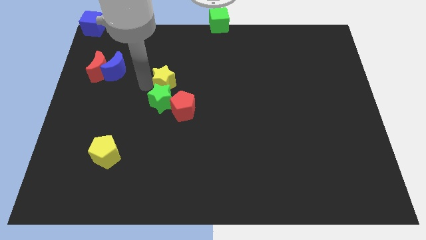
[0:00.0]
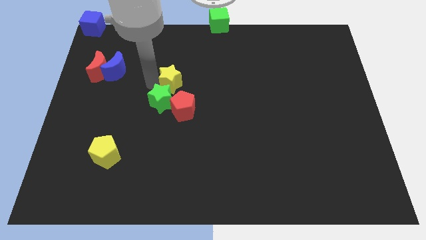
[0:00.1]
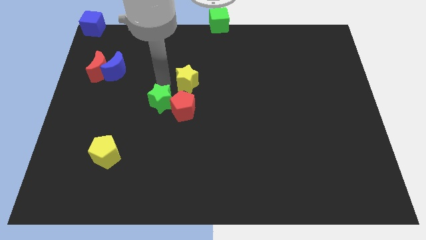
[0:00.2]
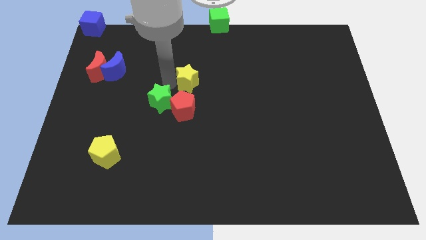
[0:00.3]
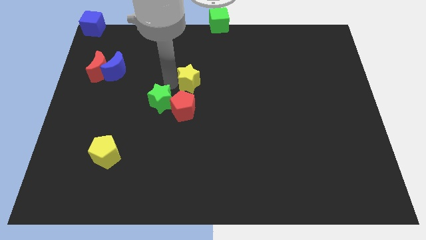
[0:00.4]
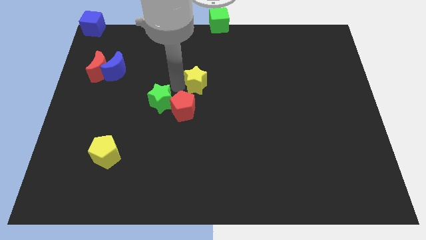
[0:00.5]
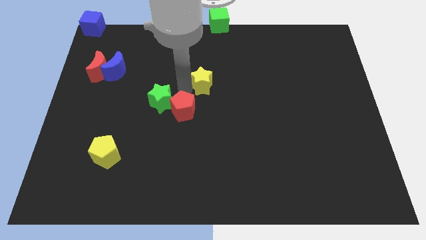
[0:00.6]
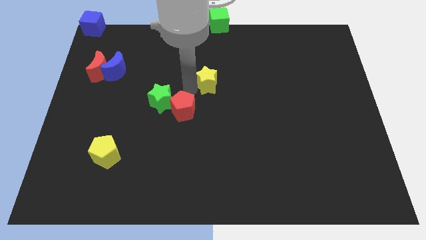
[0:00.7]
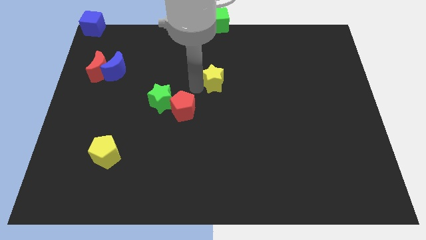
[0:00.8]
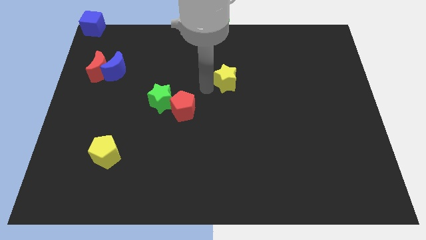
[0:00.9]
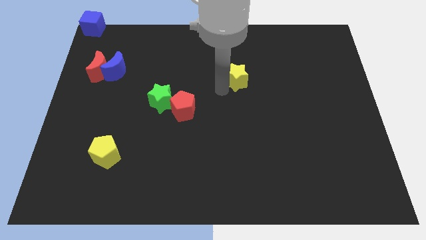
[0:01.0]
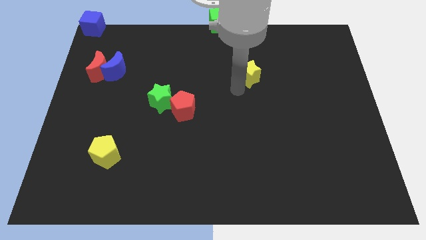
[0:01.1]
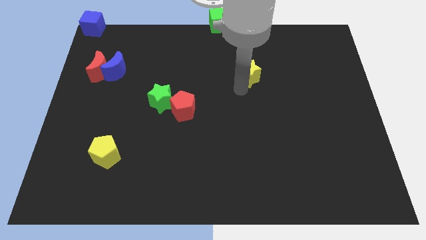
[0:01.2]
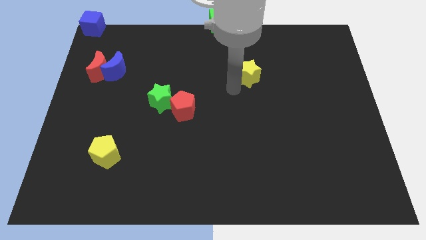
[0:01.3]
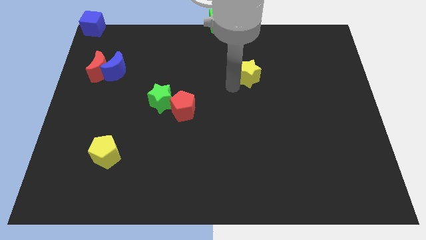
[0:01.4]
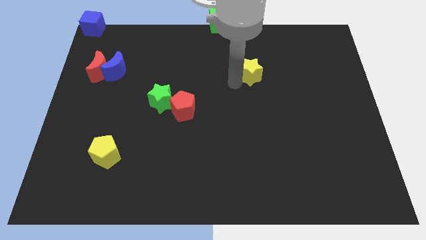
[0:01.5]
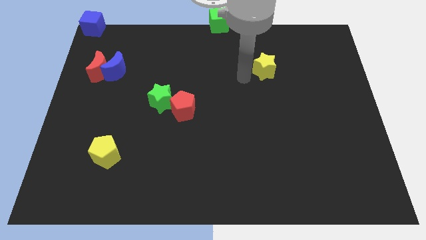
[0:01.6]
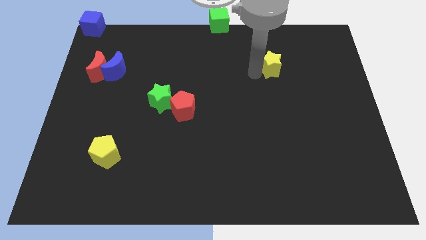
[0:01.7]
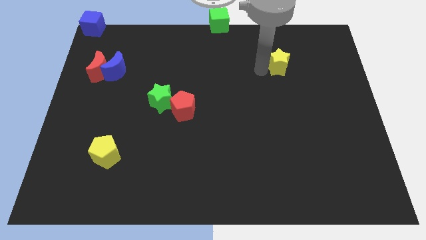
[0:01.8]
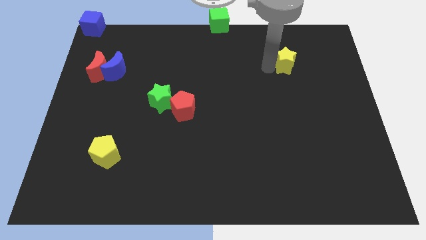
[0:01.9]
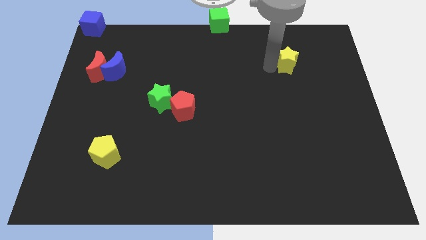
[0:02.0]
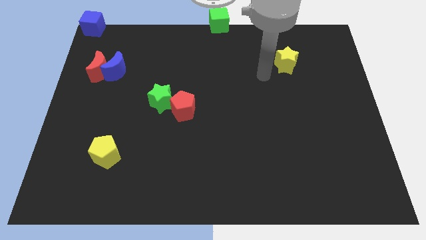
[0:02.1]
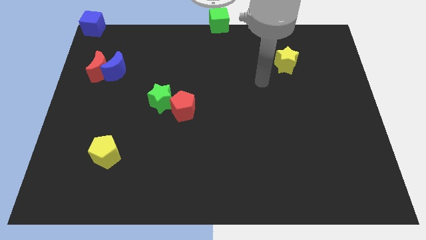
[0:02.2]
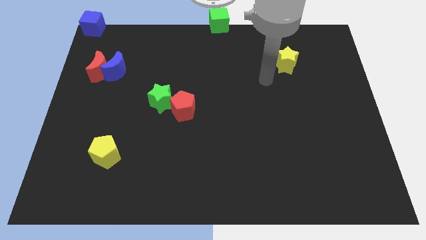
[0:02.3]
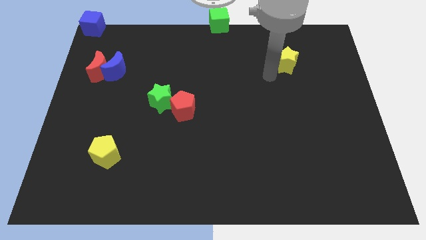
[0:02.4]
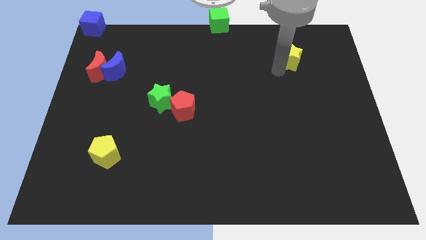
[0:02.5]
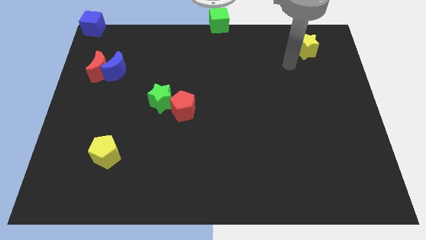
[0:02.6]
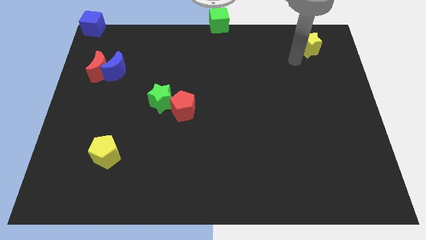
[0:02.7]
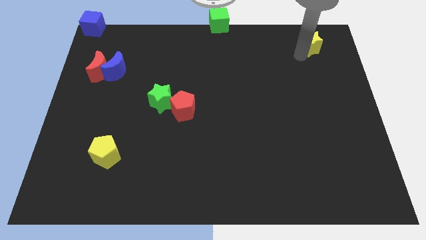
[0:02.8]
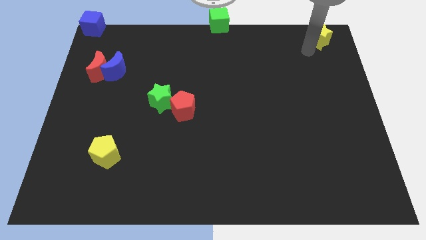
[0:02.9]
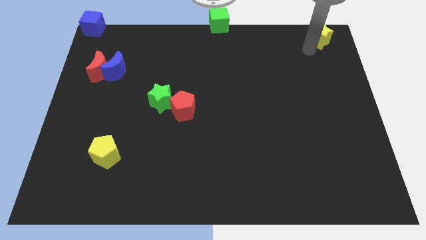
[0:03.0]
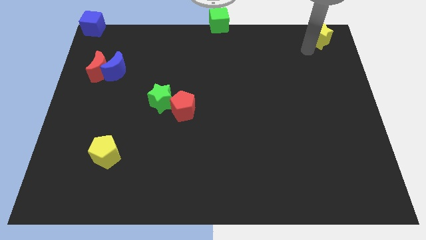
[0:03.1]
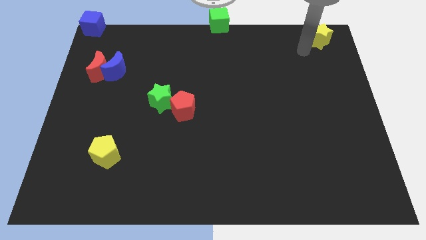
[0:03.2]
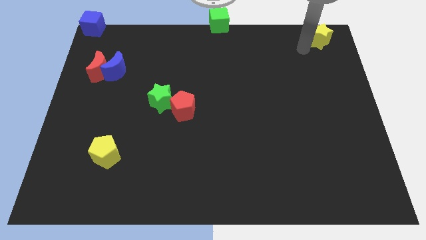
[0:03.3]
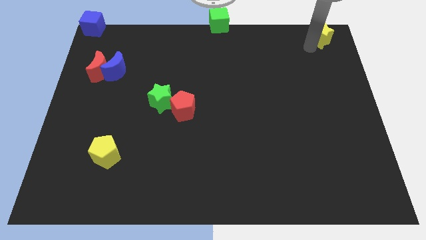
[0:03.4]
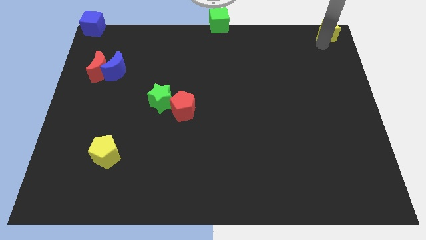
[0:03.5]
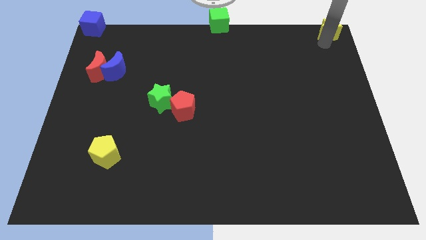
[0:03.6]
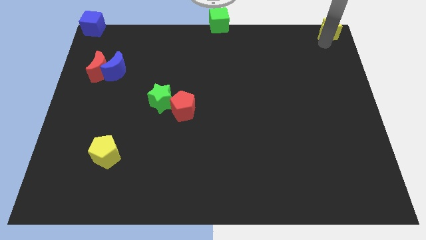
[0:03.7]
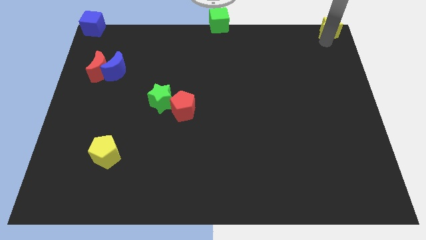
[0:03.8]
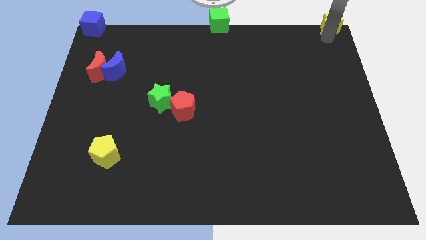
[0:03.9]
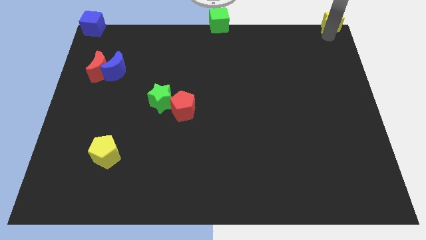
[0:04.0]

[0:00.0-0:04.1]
move the yellow star to the top right corner of the board

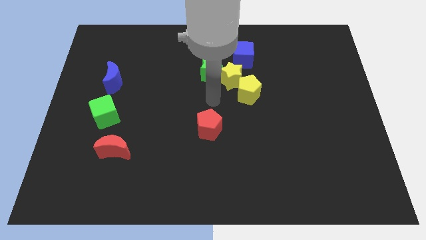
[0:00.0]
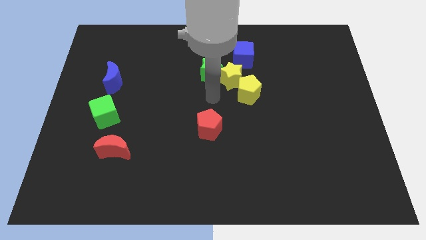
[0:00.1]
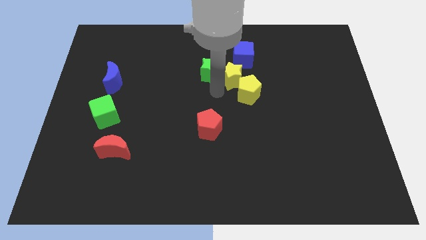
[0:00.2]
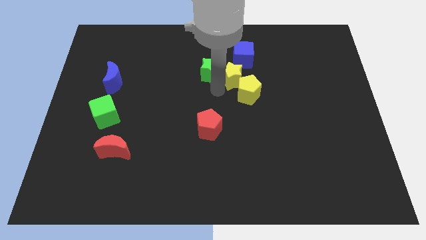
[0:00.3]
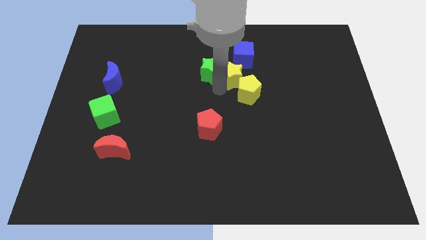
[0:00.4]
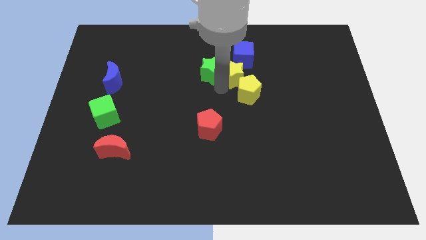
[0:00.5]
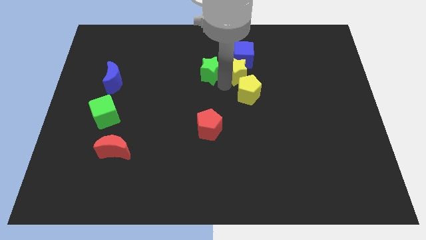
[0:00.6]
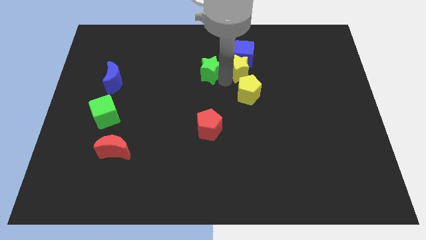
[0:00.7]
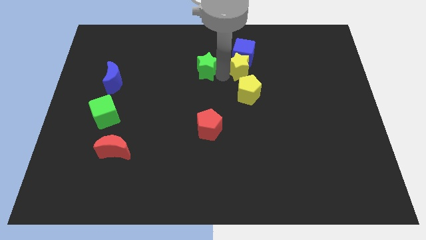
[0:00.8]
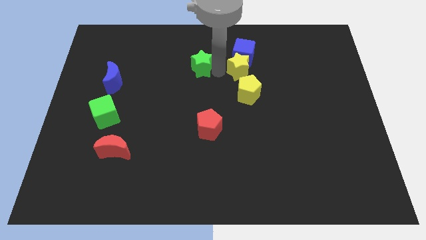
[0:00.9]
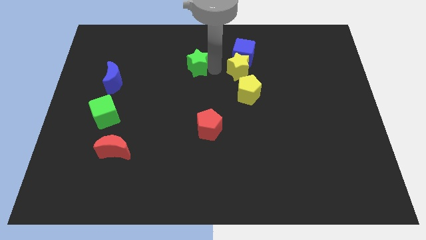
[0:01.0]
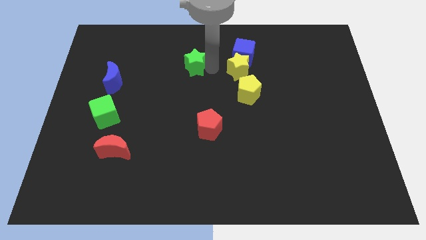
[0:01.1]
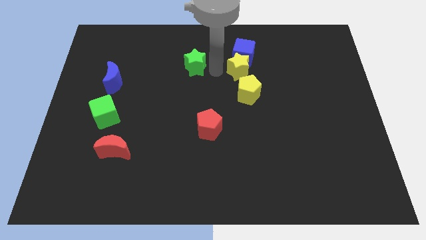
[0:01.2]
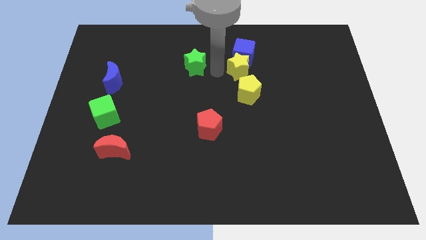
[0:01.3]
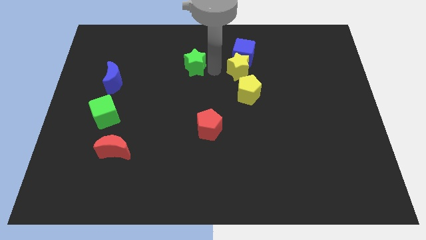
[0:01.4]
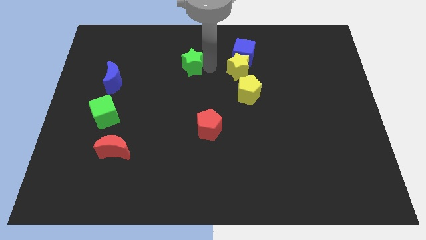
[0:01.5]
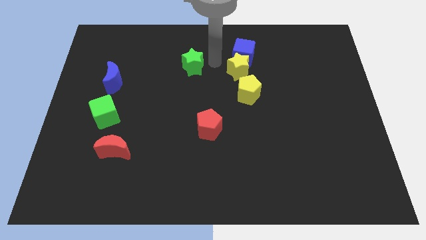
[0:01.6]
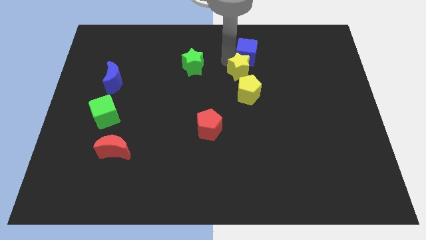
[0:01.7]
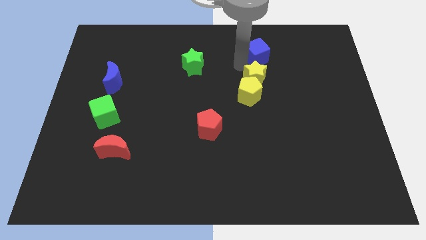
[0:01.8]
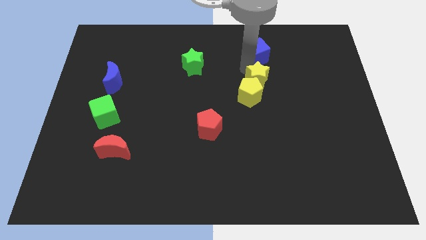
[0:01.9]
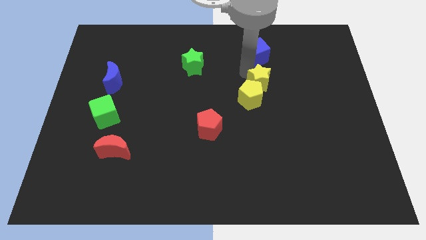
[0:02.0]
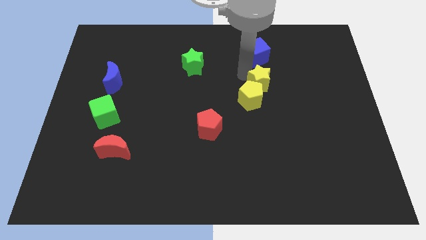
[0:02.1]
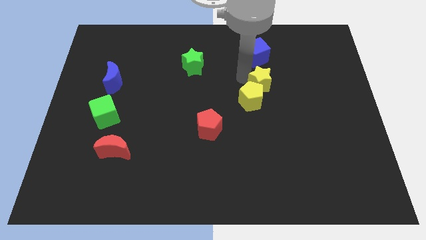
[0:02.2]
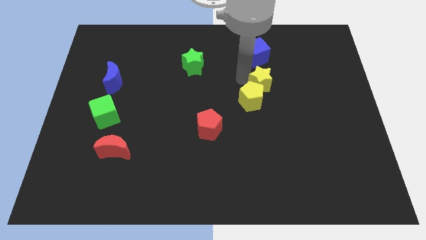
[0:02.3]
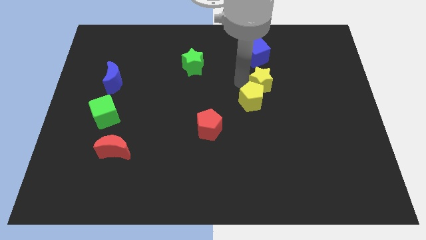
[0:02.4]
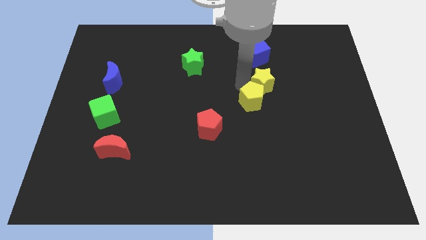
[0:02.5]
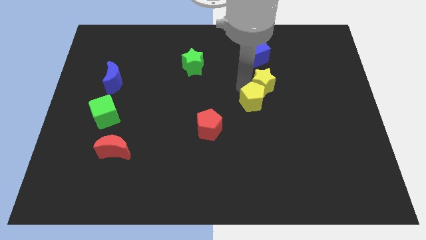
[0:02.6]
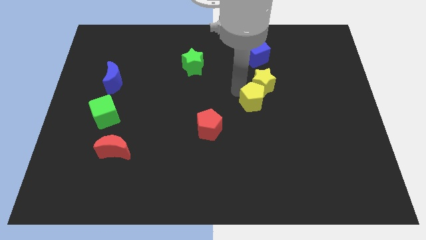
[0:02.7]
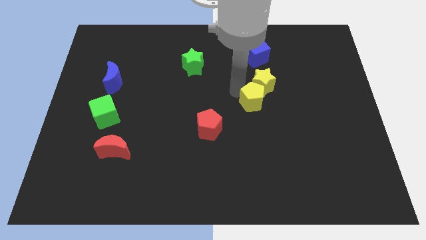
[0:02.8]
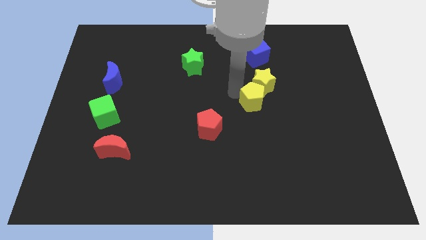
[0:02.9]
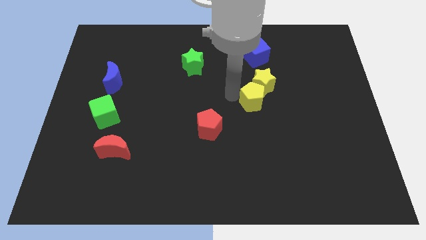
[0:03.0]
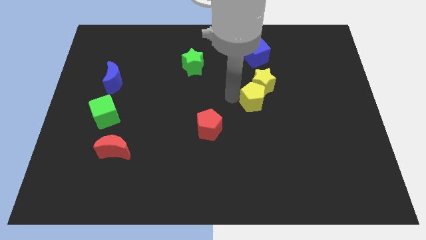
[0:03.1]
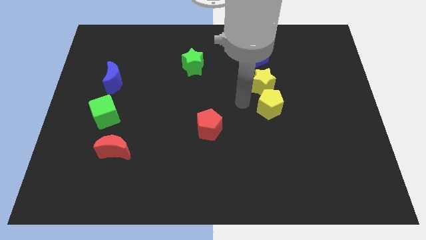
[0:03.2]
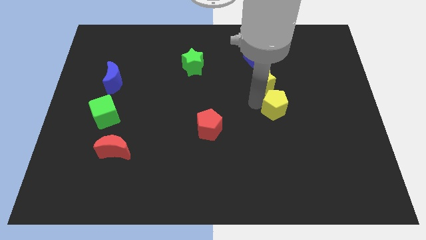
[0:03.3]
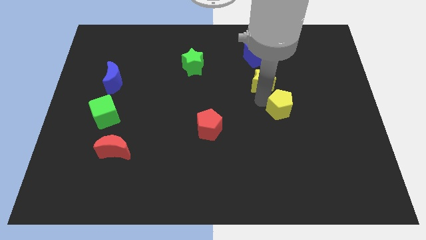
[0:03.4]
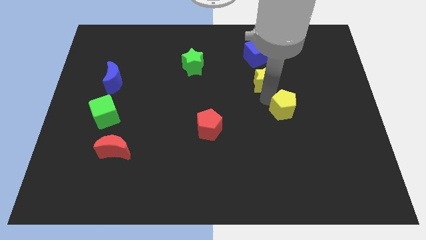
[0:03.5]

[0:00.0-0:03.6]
move the yellow blocks to right of board

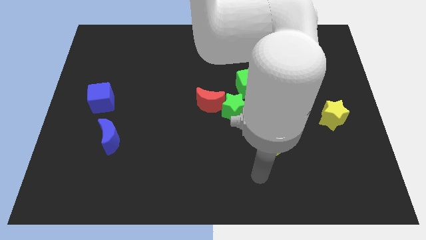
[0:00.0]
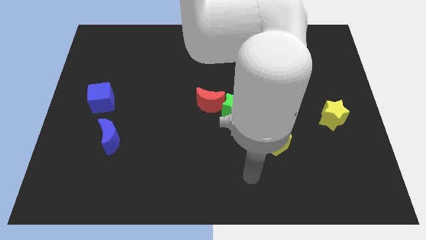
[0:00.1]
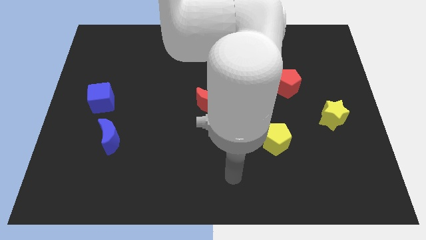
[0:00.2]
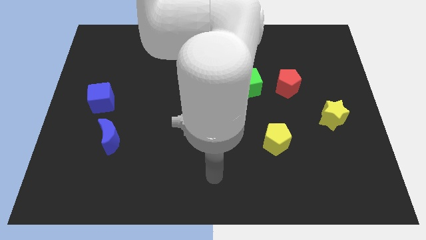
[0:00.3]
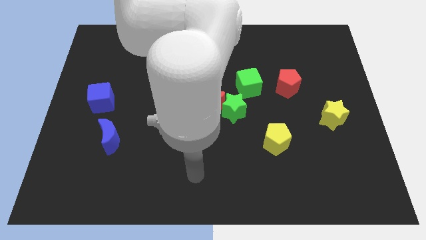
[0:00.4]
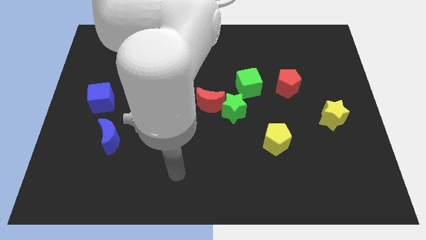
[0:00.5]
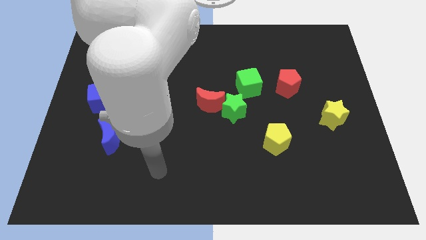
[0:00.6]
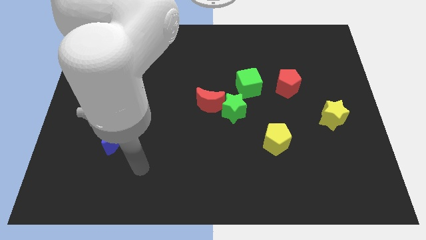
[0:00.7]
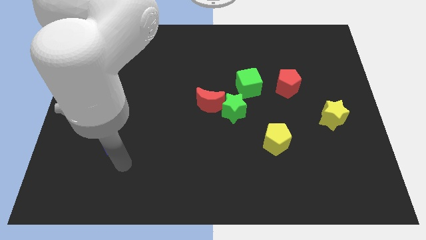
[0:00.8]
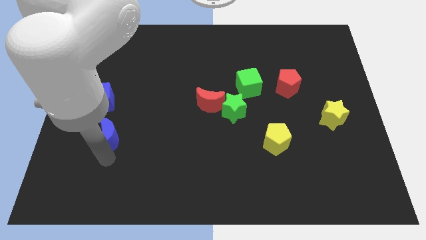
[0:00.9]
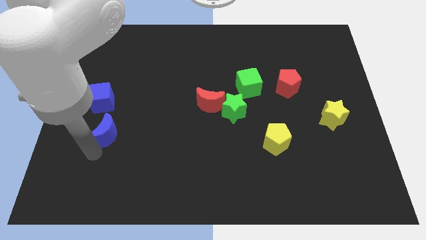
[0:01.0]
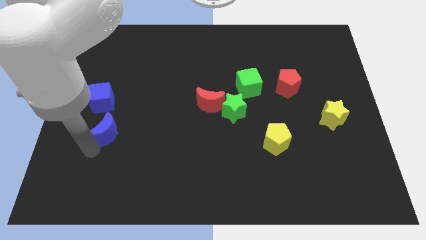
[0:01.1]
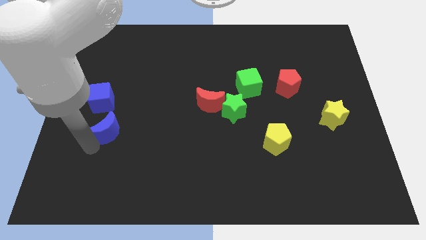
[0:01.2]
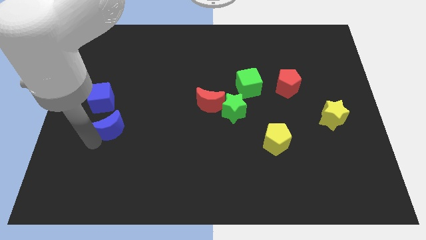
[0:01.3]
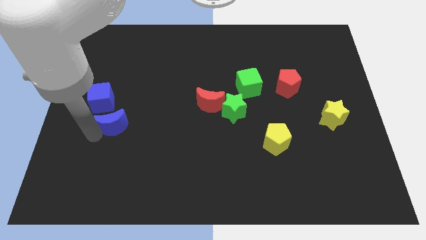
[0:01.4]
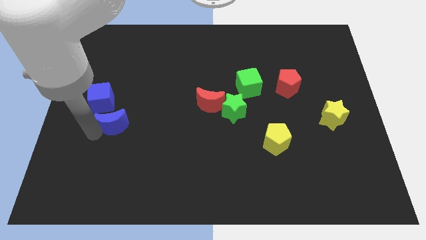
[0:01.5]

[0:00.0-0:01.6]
move the blue moon below the blue cube
